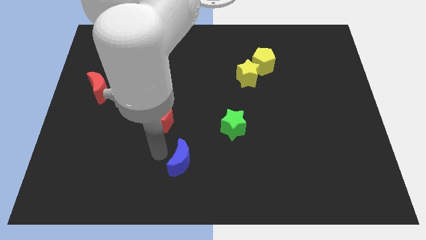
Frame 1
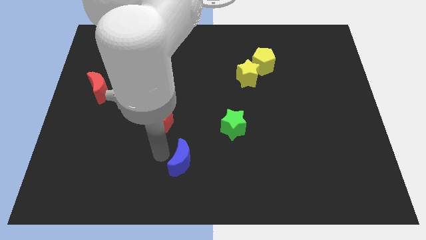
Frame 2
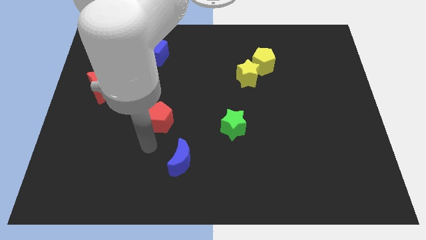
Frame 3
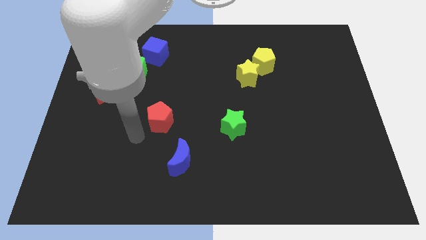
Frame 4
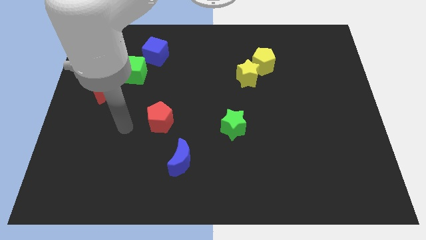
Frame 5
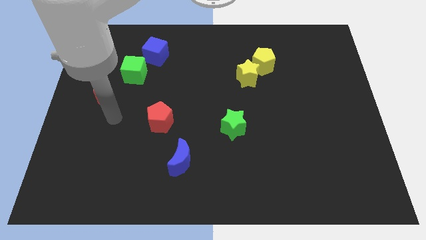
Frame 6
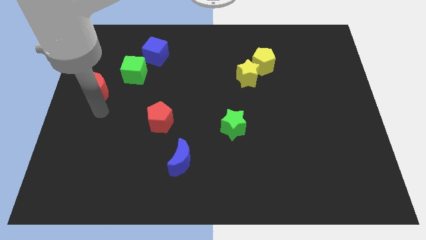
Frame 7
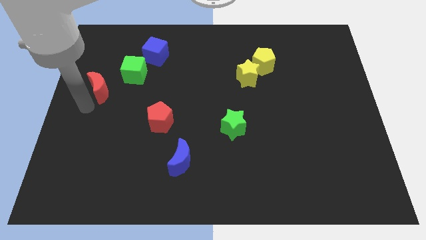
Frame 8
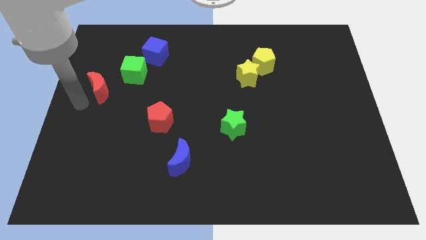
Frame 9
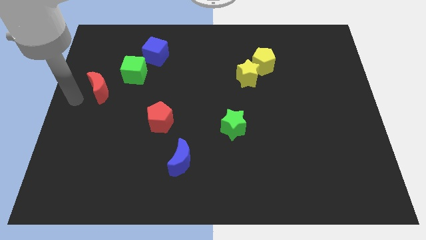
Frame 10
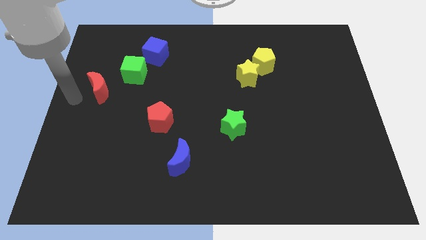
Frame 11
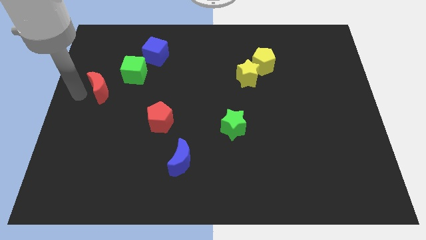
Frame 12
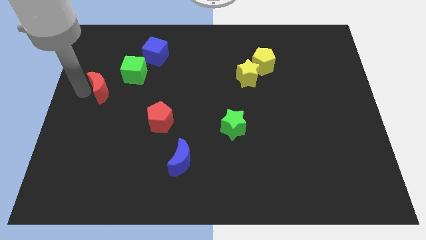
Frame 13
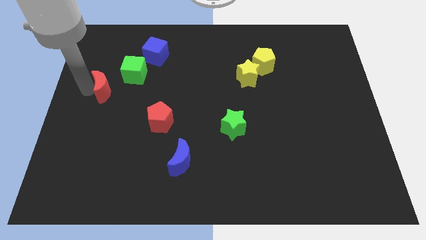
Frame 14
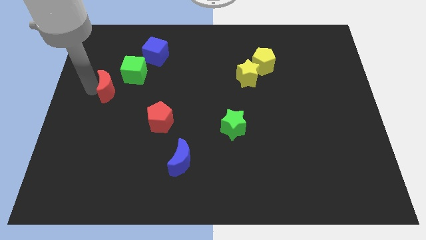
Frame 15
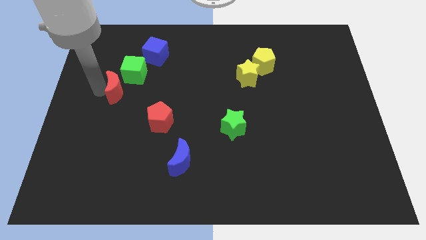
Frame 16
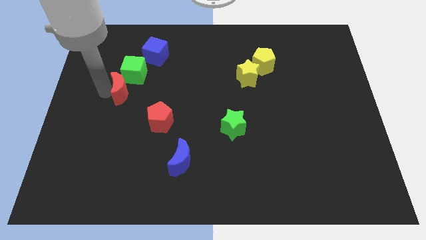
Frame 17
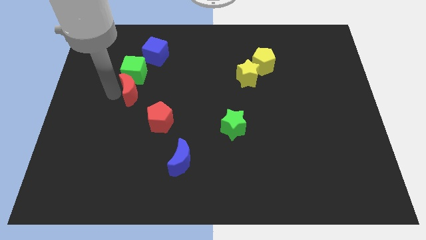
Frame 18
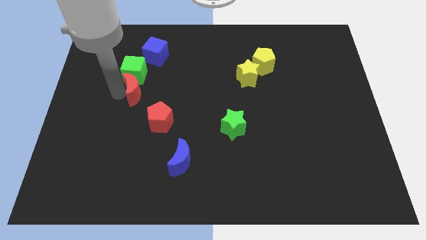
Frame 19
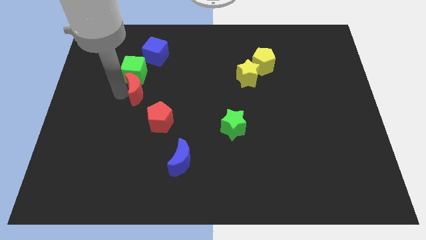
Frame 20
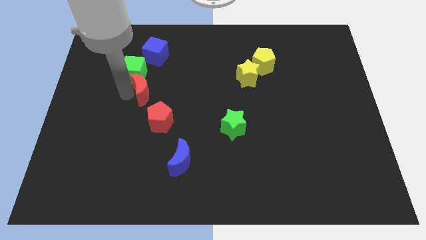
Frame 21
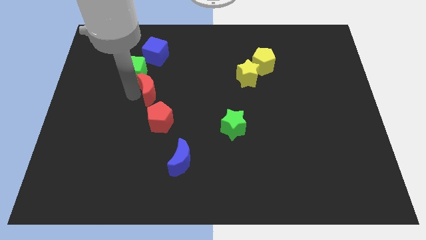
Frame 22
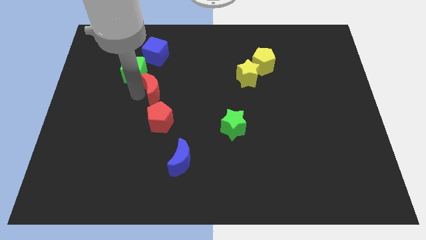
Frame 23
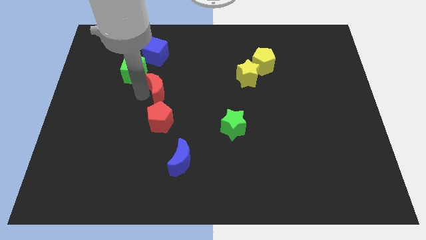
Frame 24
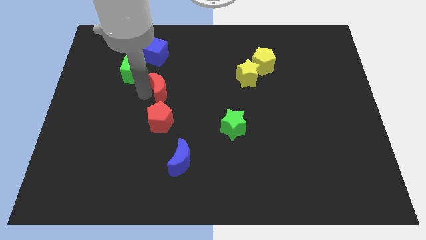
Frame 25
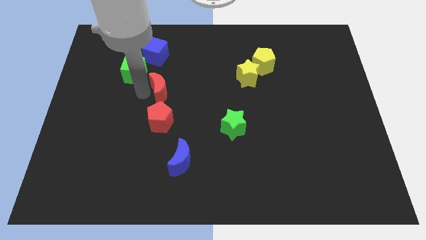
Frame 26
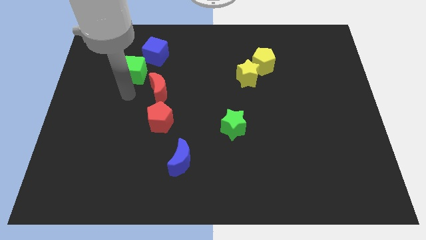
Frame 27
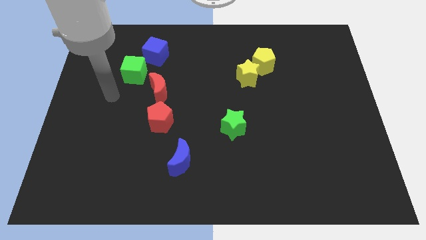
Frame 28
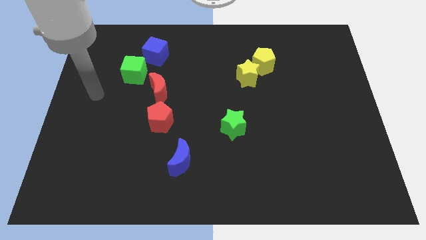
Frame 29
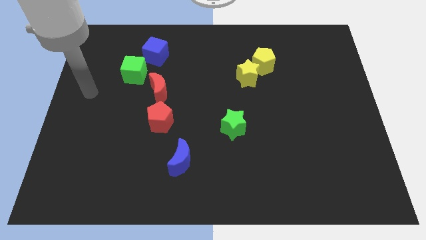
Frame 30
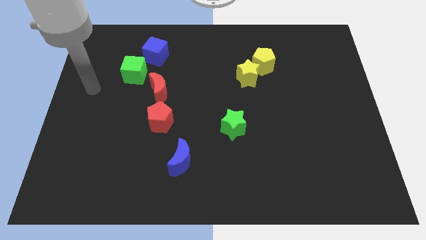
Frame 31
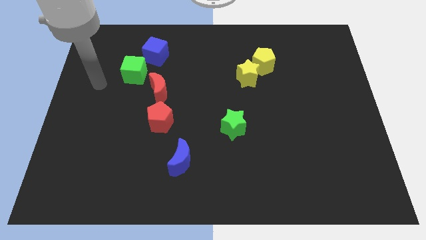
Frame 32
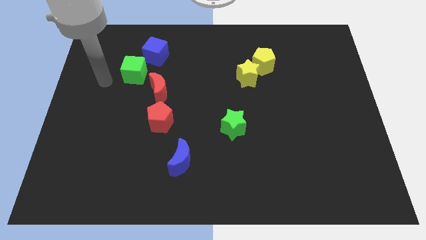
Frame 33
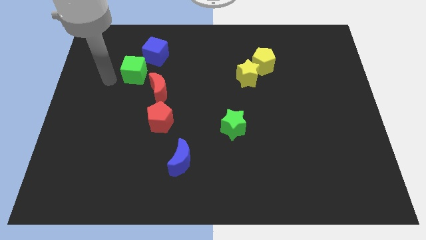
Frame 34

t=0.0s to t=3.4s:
put the red moon above the red pentagon

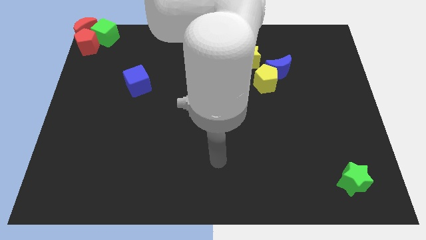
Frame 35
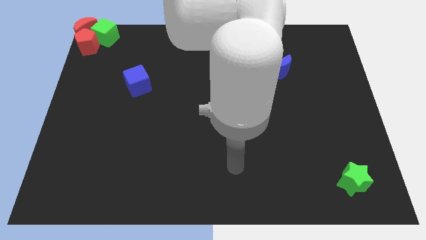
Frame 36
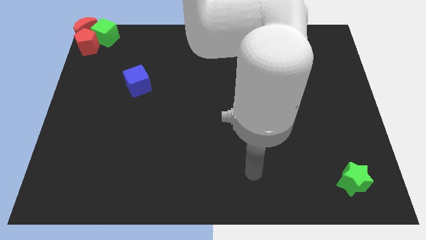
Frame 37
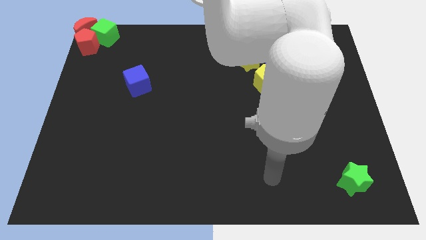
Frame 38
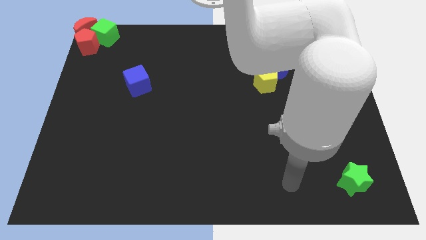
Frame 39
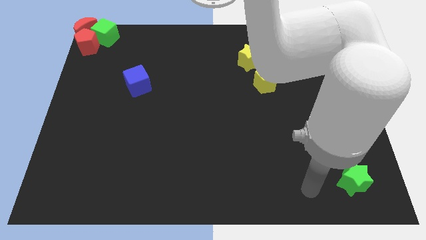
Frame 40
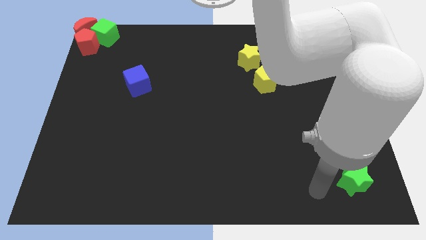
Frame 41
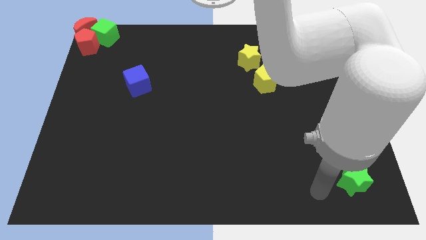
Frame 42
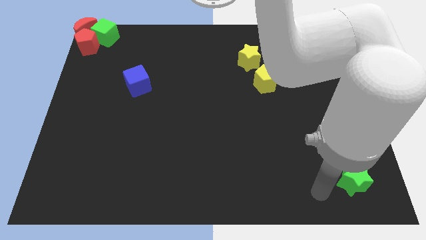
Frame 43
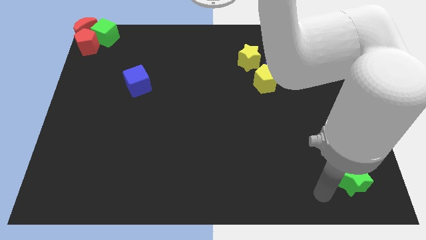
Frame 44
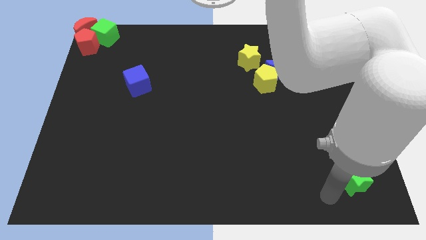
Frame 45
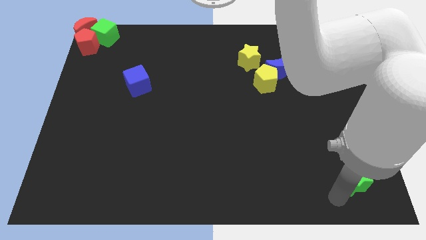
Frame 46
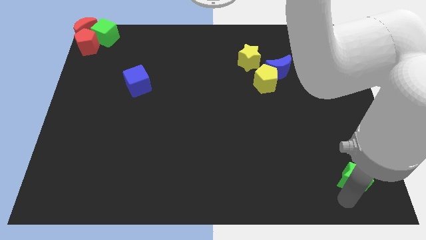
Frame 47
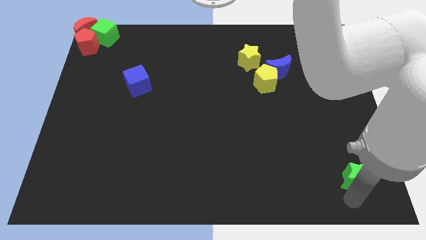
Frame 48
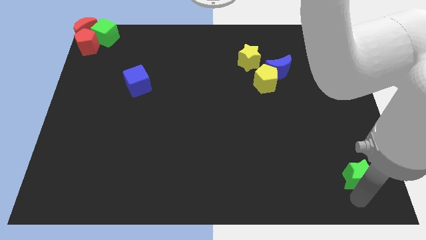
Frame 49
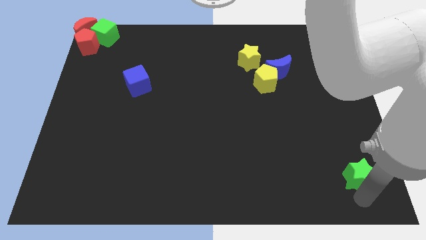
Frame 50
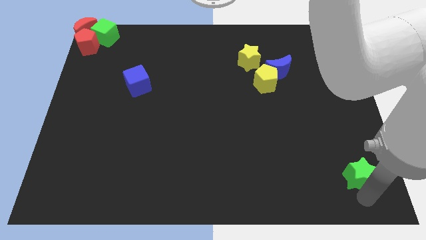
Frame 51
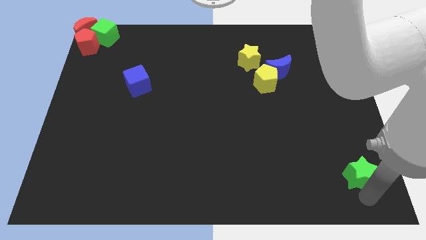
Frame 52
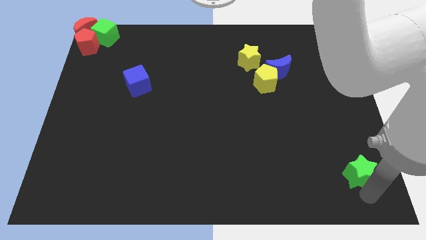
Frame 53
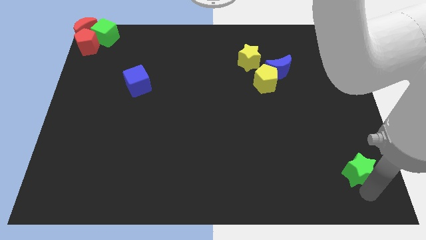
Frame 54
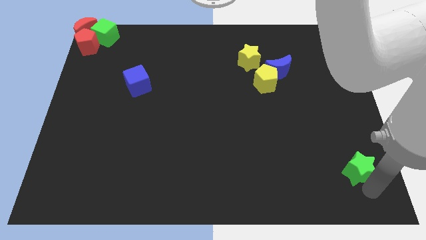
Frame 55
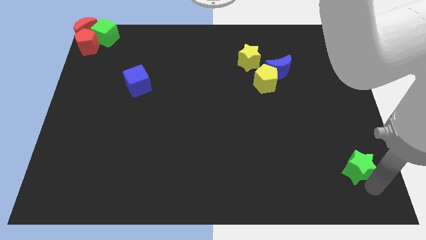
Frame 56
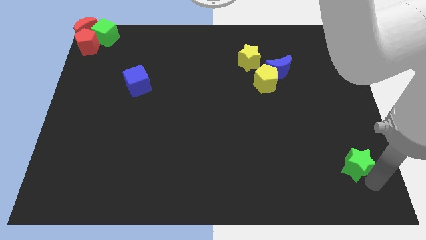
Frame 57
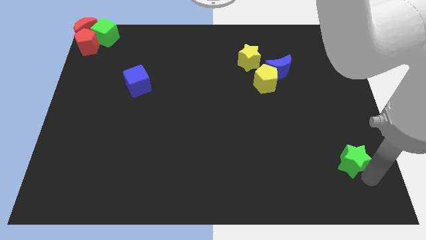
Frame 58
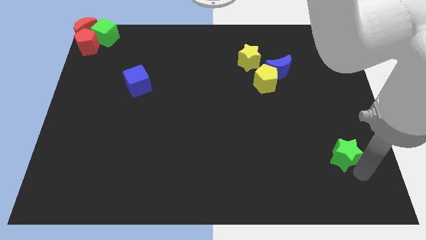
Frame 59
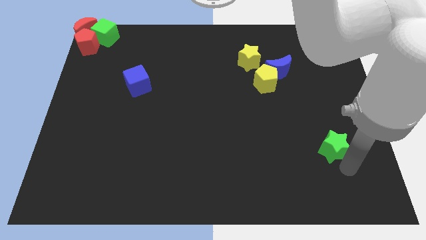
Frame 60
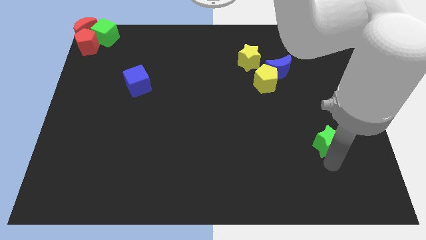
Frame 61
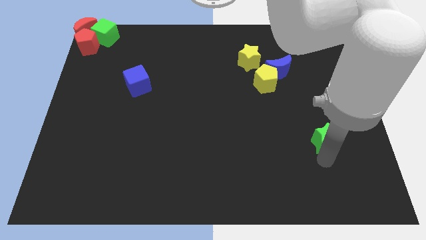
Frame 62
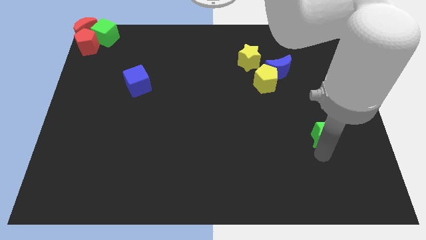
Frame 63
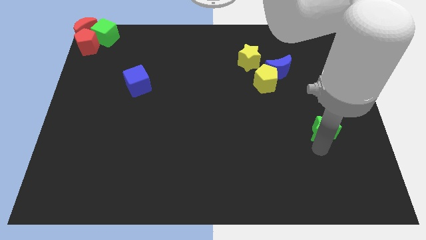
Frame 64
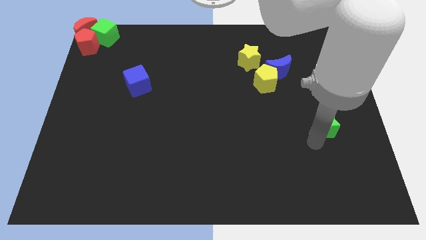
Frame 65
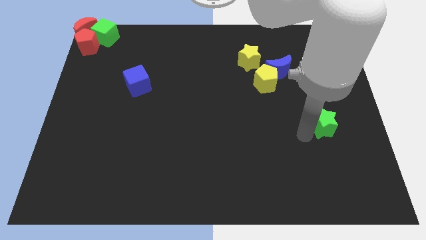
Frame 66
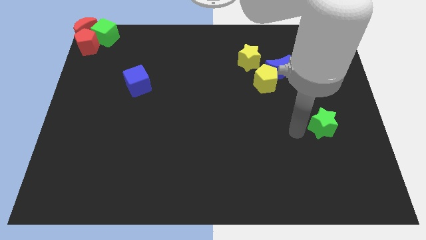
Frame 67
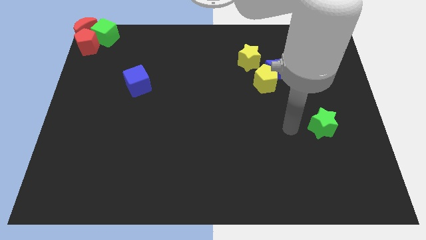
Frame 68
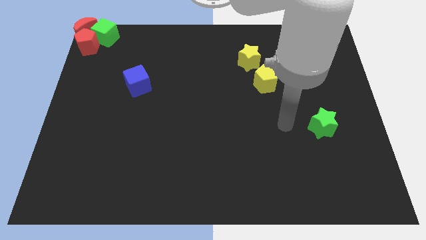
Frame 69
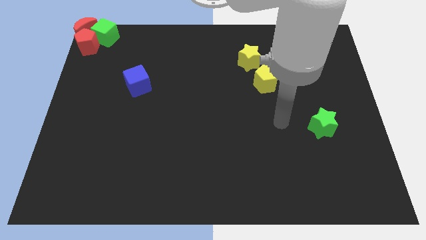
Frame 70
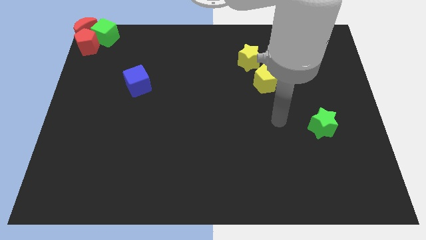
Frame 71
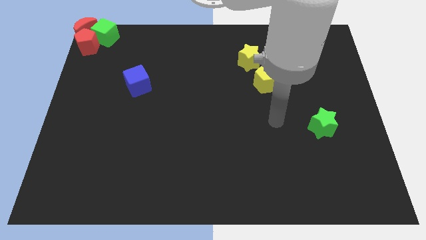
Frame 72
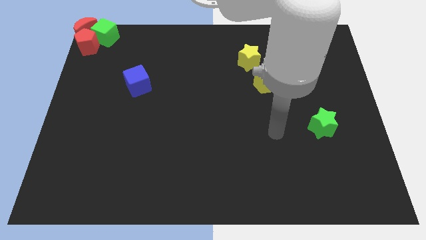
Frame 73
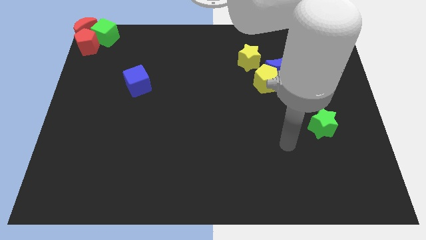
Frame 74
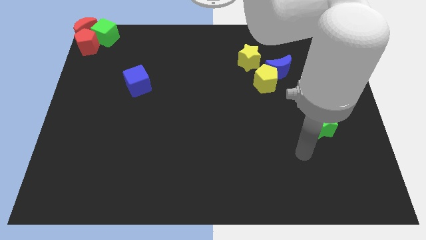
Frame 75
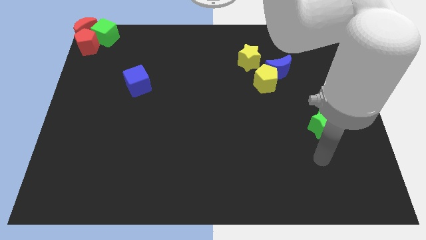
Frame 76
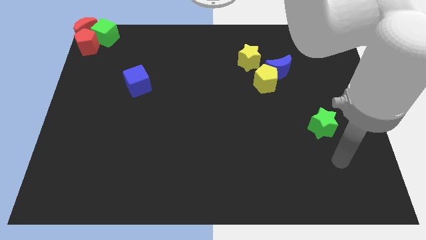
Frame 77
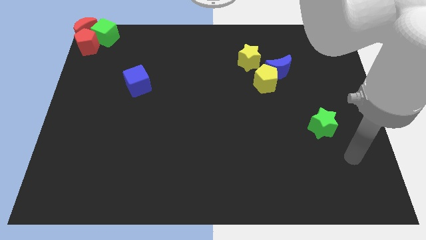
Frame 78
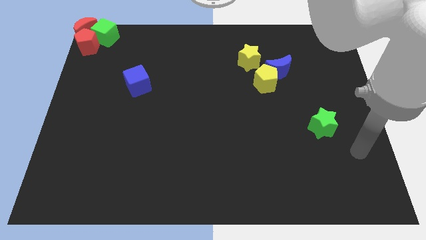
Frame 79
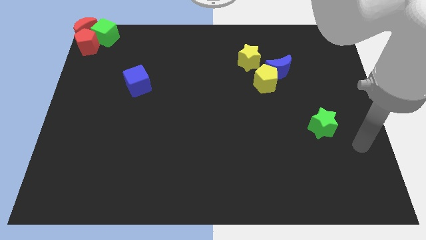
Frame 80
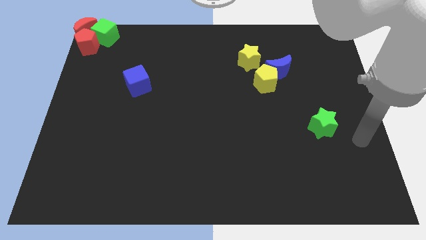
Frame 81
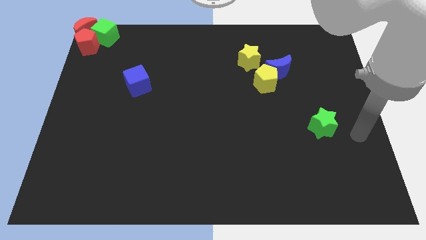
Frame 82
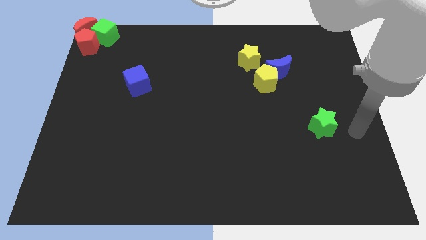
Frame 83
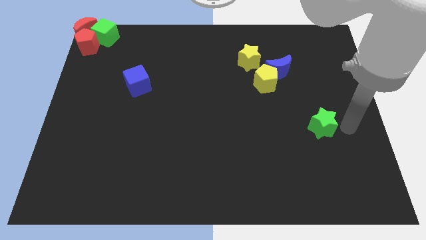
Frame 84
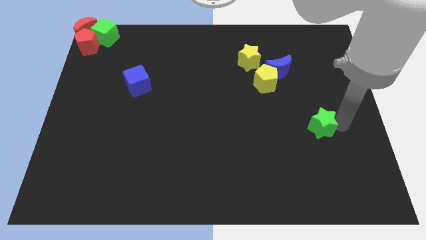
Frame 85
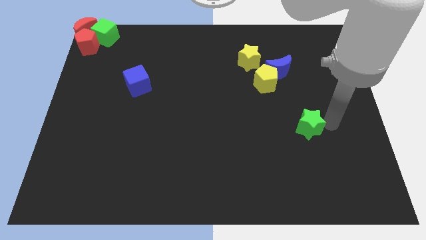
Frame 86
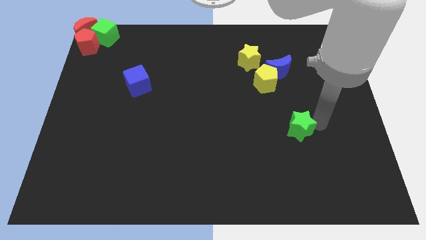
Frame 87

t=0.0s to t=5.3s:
push the green star towards the yellow pentagon

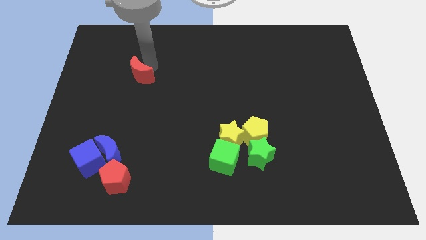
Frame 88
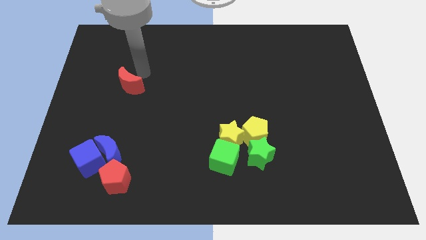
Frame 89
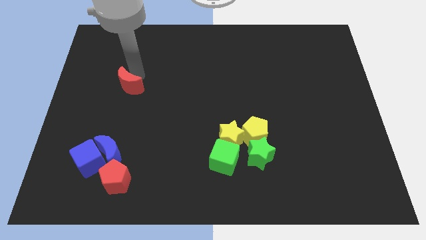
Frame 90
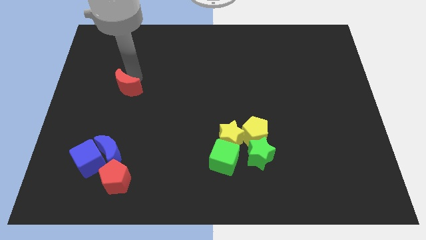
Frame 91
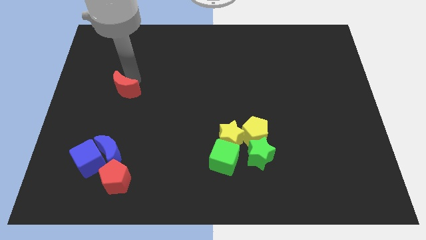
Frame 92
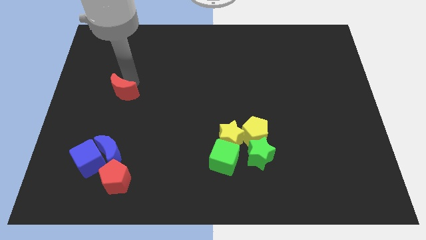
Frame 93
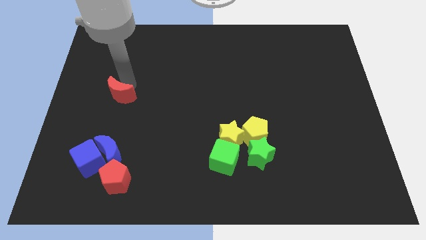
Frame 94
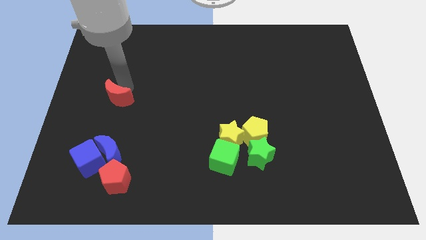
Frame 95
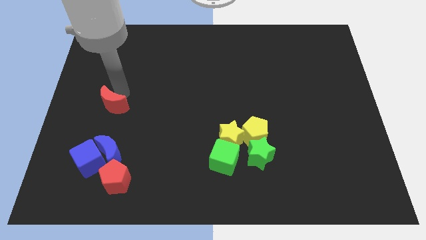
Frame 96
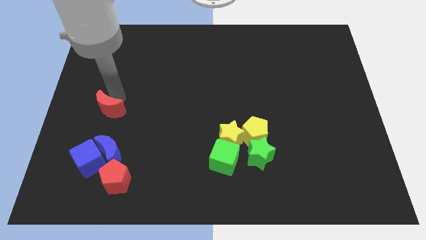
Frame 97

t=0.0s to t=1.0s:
push the red crescent to the bottom of the board
